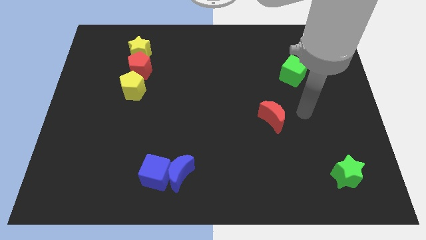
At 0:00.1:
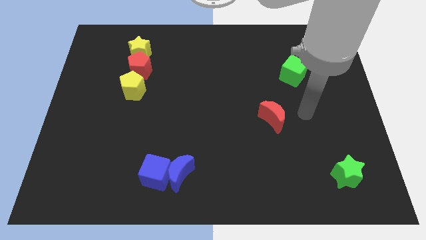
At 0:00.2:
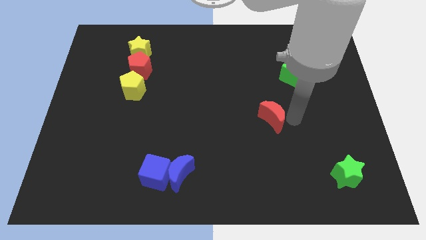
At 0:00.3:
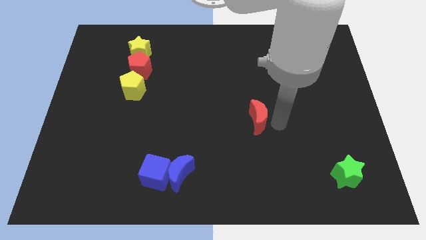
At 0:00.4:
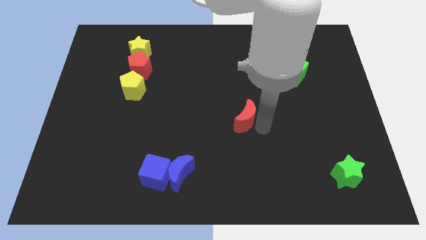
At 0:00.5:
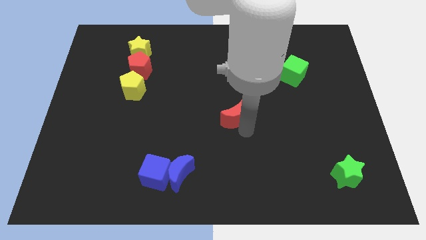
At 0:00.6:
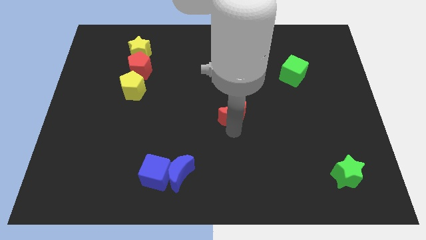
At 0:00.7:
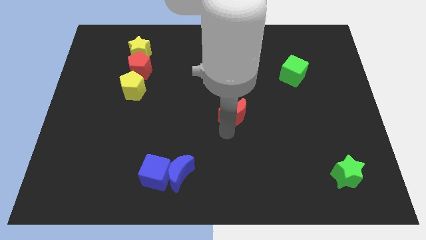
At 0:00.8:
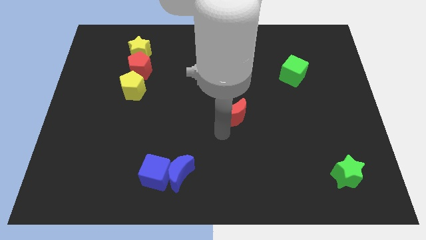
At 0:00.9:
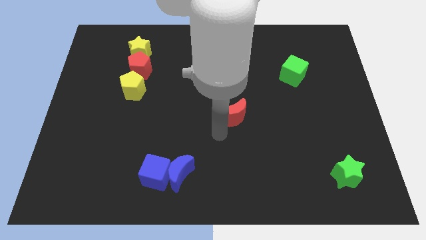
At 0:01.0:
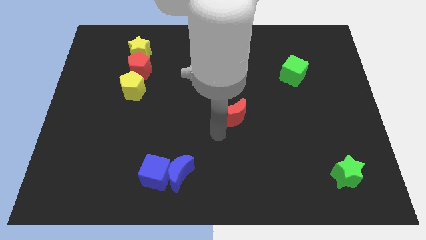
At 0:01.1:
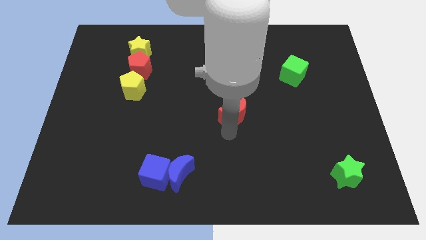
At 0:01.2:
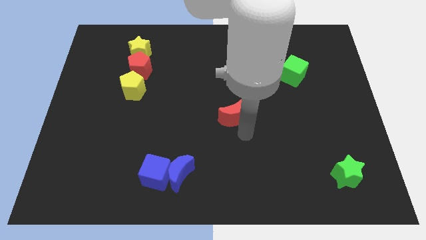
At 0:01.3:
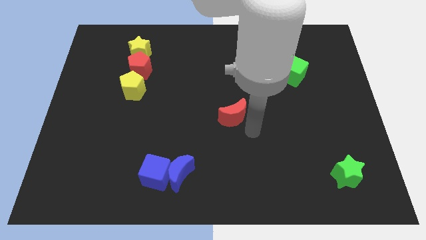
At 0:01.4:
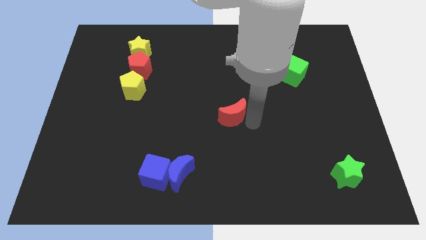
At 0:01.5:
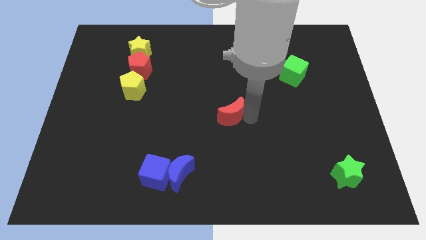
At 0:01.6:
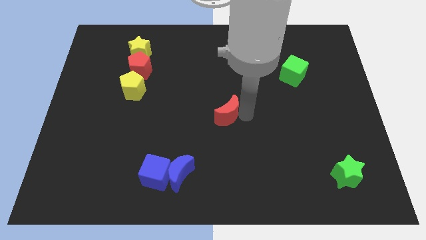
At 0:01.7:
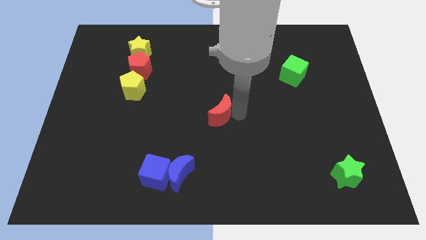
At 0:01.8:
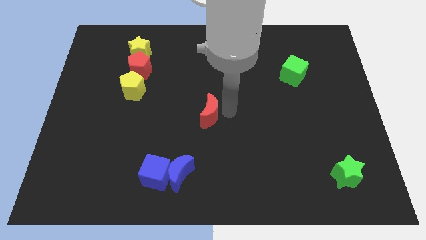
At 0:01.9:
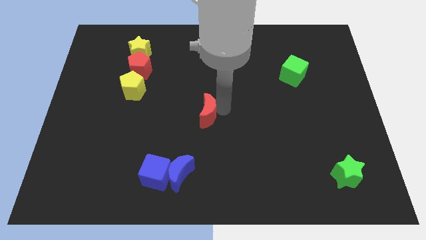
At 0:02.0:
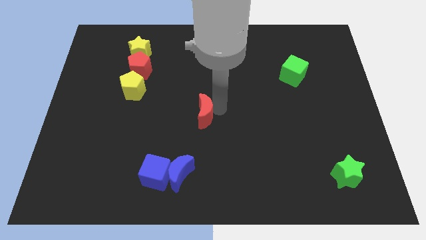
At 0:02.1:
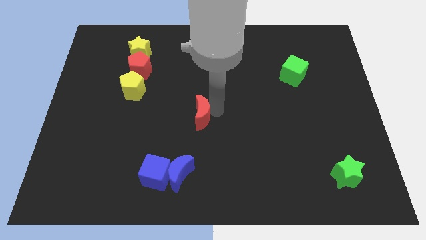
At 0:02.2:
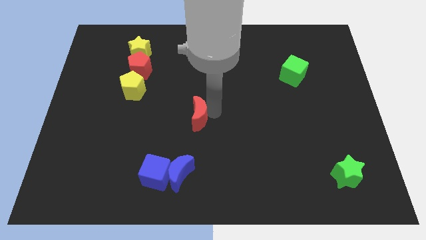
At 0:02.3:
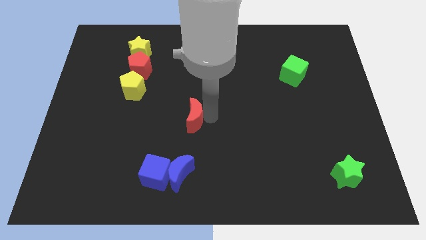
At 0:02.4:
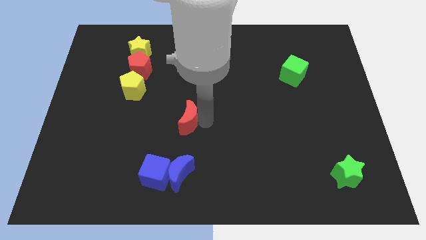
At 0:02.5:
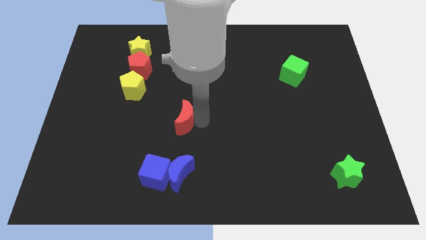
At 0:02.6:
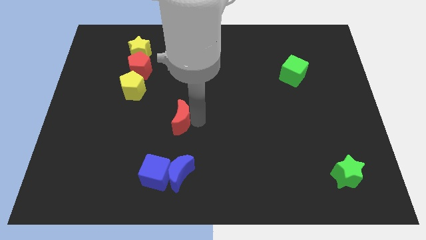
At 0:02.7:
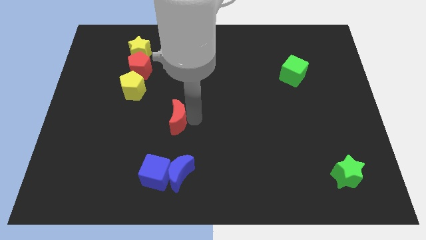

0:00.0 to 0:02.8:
move the red moon above the blue blocks

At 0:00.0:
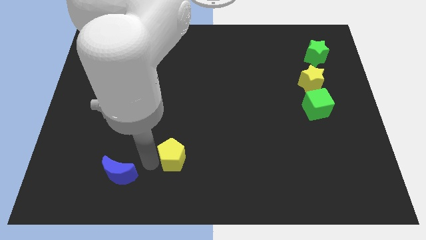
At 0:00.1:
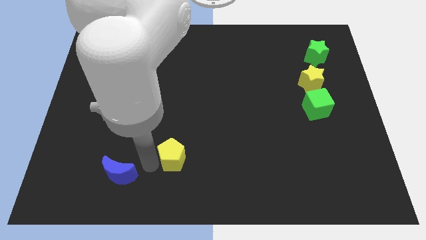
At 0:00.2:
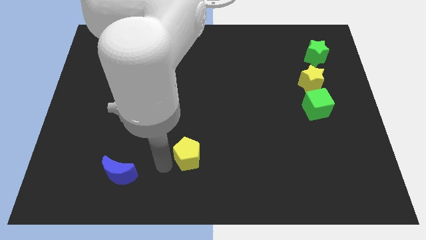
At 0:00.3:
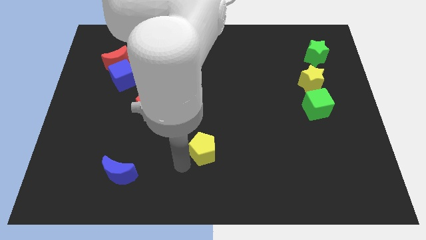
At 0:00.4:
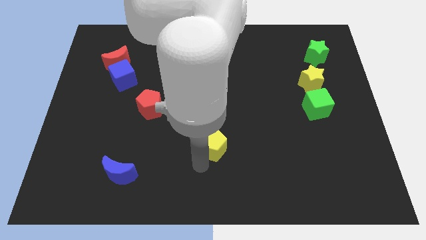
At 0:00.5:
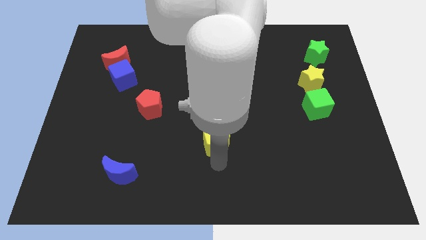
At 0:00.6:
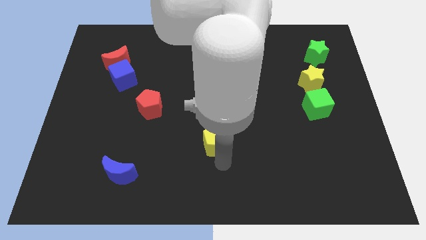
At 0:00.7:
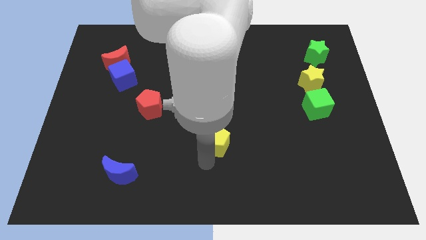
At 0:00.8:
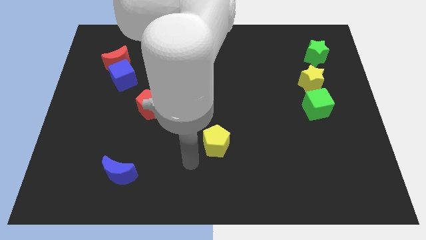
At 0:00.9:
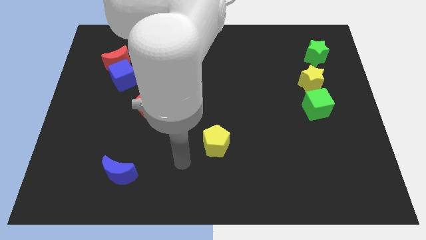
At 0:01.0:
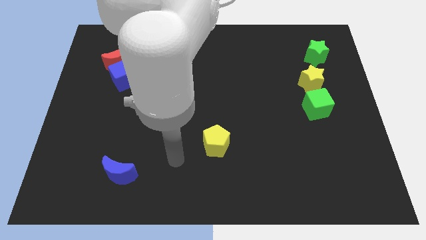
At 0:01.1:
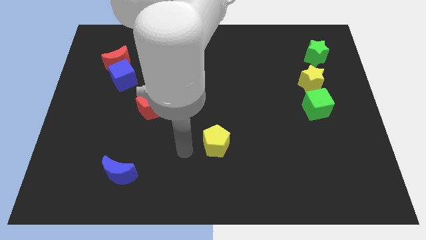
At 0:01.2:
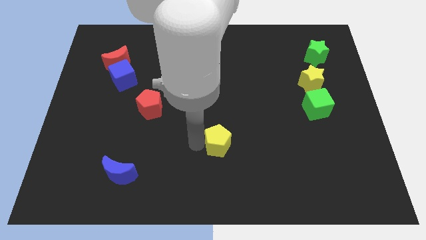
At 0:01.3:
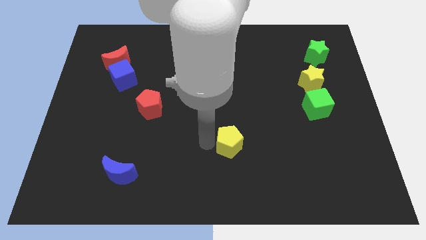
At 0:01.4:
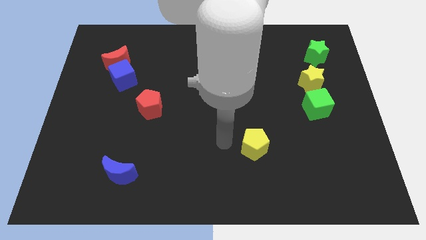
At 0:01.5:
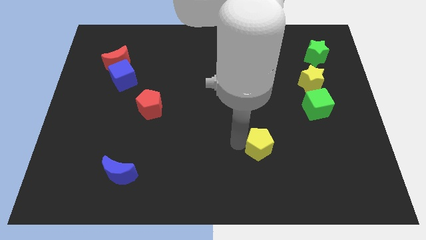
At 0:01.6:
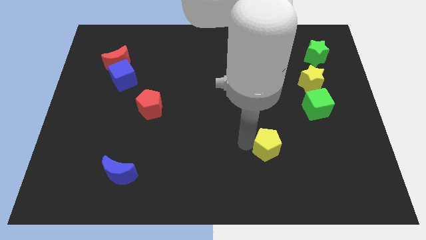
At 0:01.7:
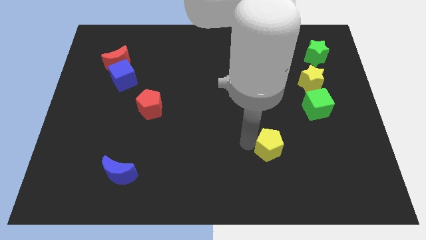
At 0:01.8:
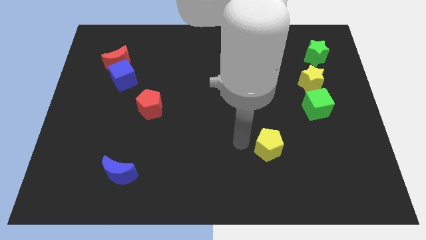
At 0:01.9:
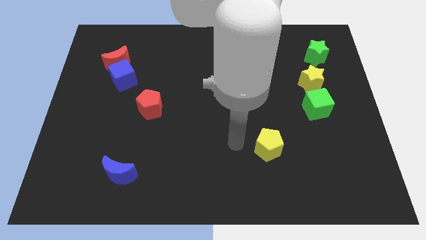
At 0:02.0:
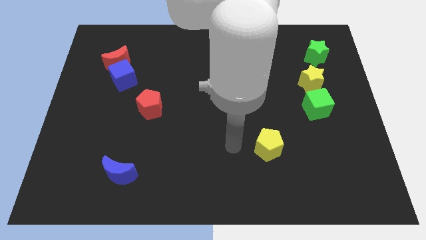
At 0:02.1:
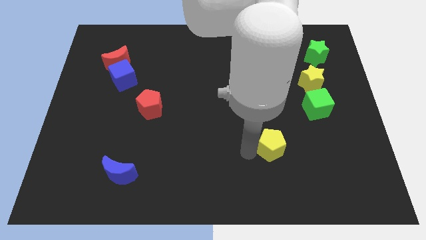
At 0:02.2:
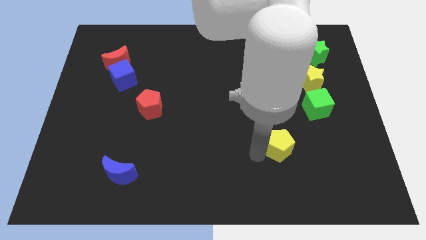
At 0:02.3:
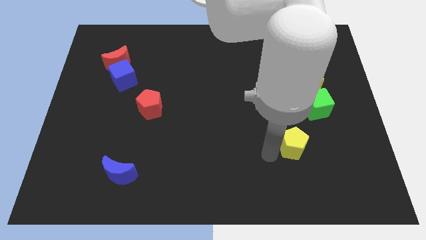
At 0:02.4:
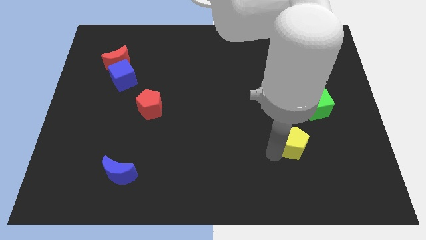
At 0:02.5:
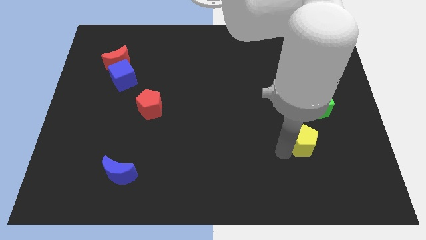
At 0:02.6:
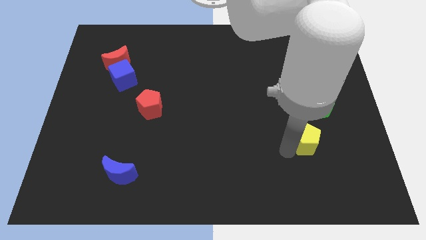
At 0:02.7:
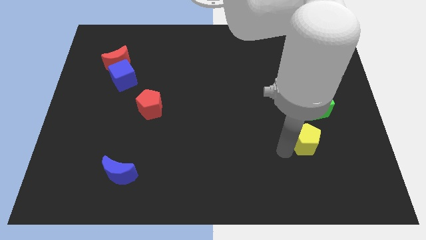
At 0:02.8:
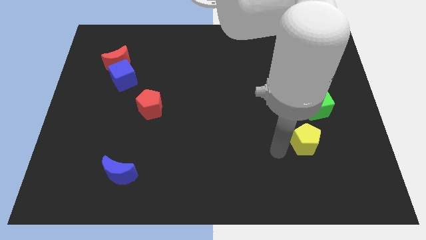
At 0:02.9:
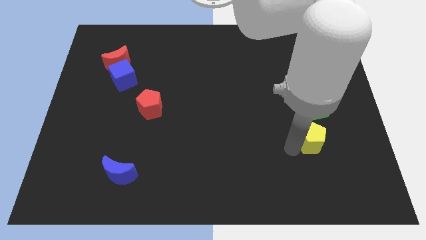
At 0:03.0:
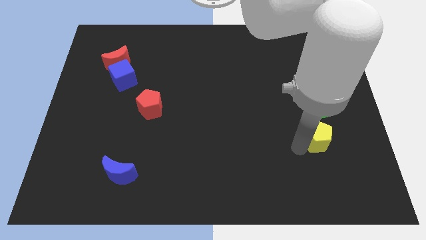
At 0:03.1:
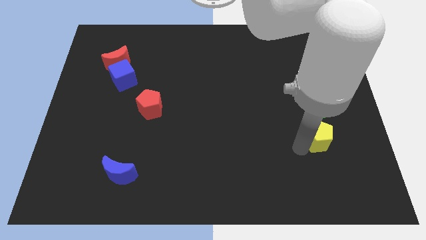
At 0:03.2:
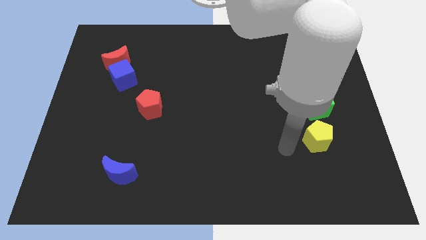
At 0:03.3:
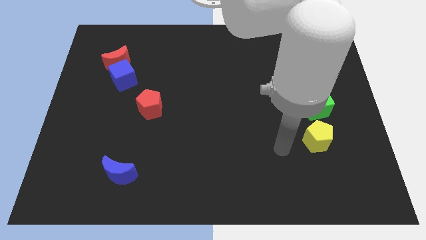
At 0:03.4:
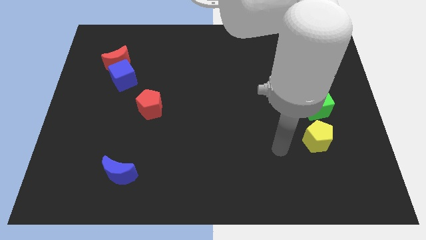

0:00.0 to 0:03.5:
place the yellow pentagon down to the green cube

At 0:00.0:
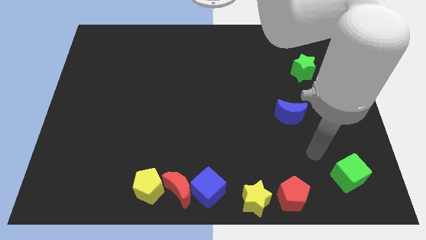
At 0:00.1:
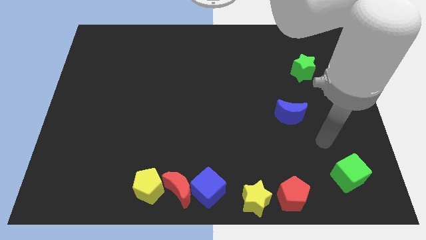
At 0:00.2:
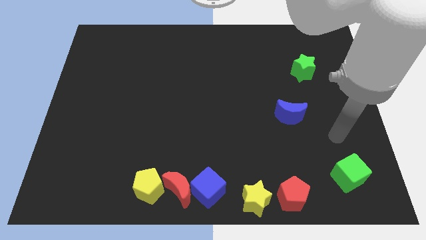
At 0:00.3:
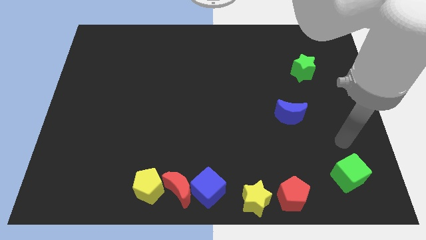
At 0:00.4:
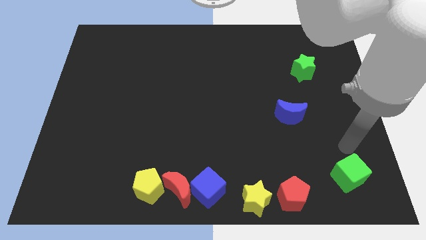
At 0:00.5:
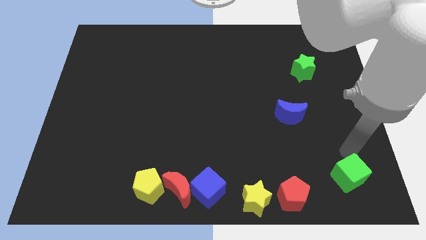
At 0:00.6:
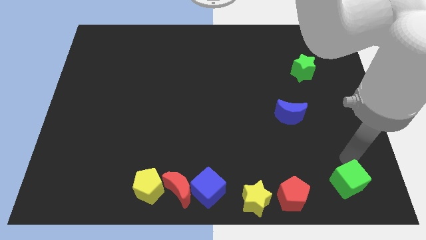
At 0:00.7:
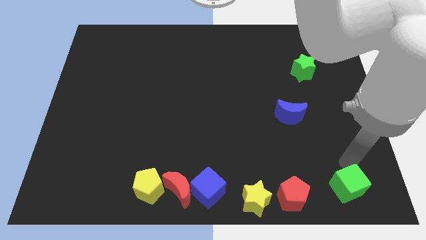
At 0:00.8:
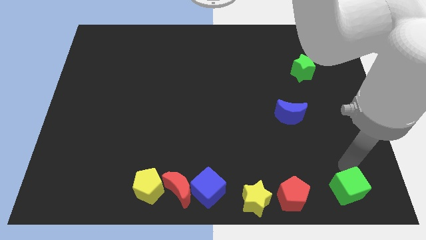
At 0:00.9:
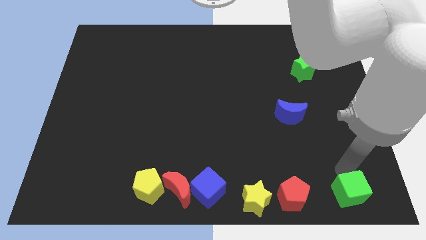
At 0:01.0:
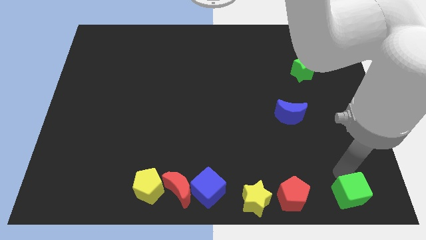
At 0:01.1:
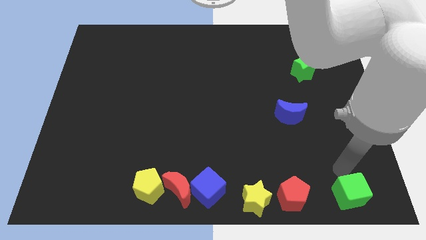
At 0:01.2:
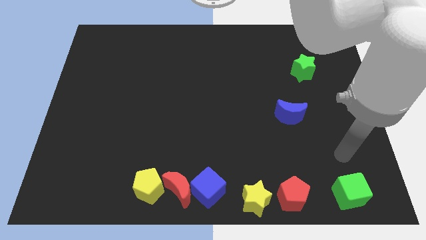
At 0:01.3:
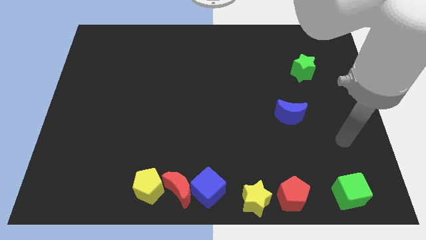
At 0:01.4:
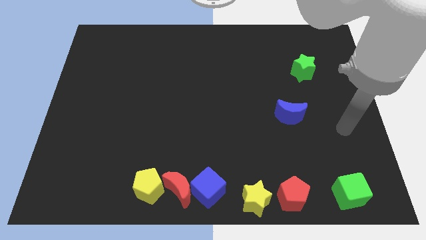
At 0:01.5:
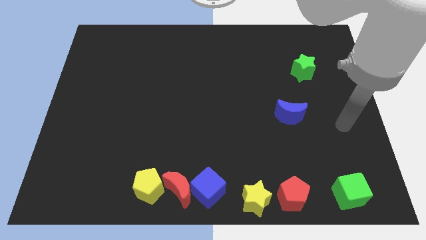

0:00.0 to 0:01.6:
place the green cube at right side of the red pentagon

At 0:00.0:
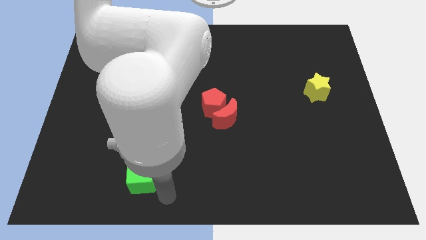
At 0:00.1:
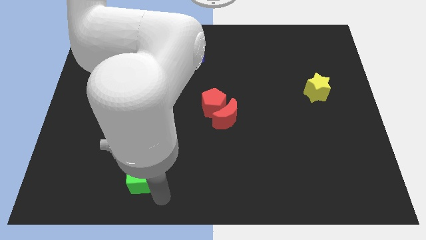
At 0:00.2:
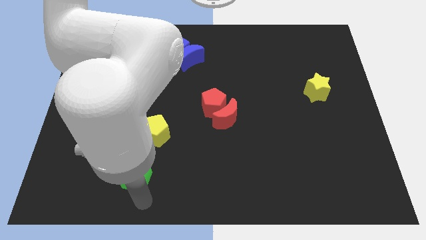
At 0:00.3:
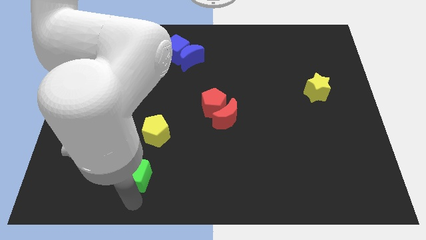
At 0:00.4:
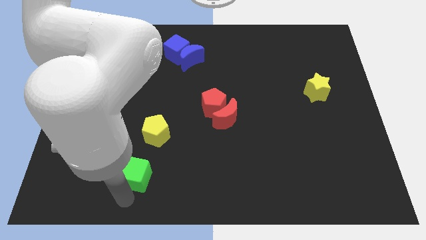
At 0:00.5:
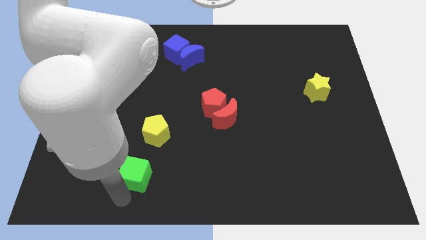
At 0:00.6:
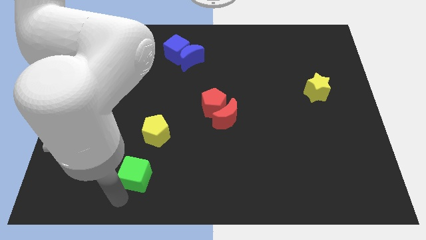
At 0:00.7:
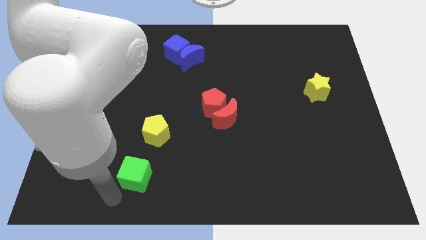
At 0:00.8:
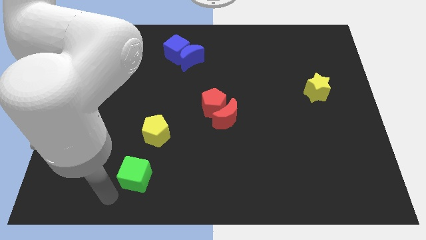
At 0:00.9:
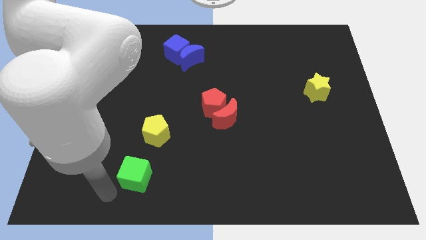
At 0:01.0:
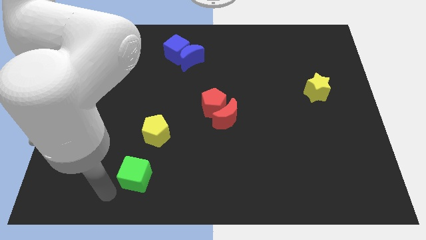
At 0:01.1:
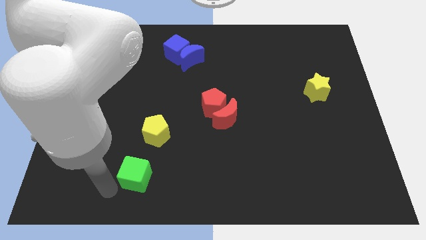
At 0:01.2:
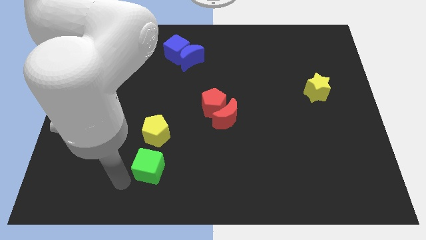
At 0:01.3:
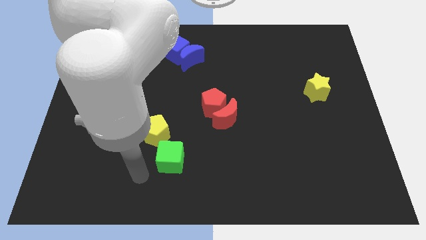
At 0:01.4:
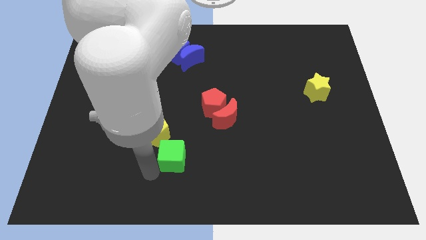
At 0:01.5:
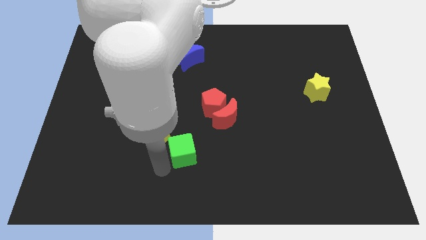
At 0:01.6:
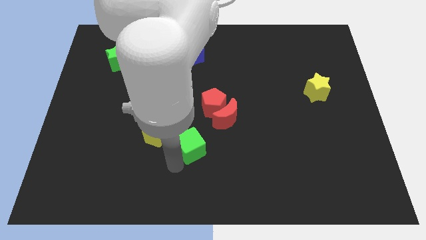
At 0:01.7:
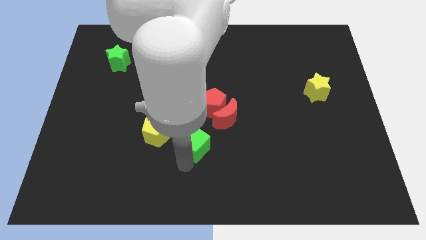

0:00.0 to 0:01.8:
drag the green cube diagonally bottom right to the yellow pentagon
